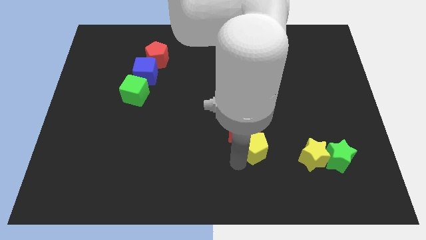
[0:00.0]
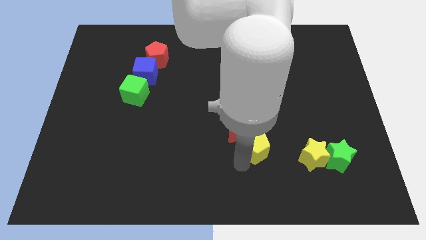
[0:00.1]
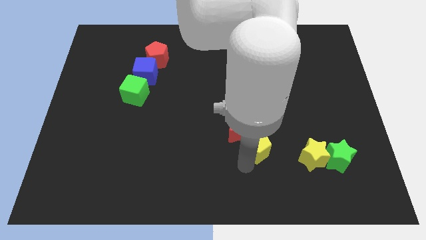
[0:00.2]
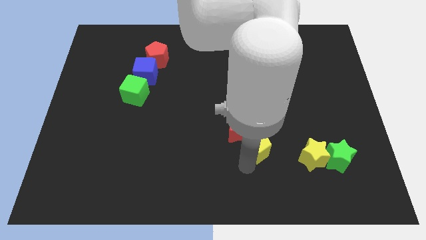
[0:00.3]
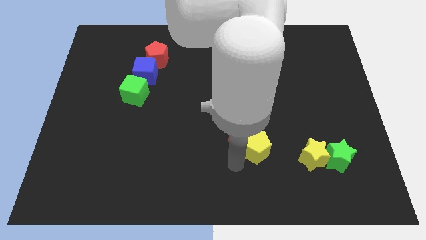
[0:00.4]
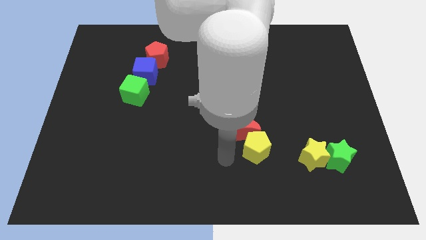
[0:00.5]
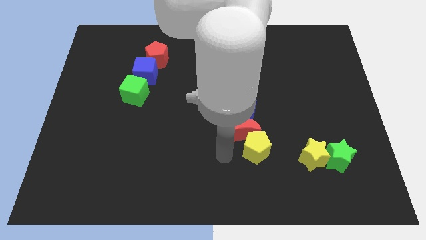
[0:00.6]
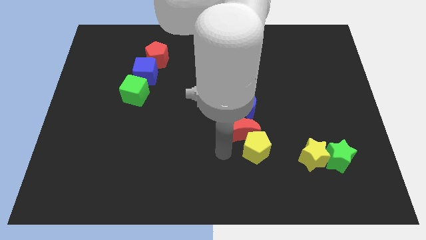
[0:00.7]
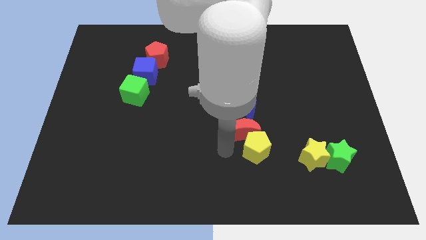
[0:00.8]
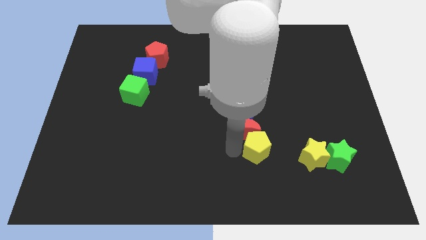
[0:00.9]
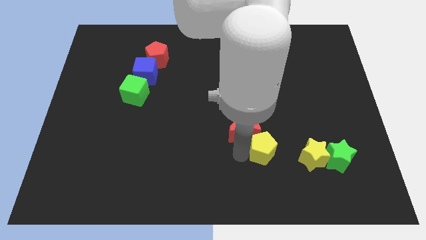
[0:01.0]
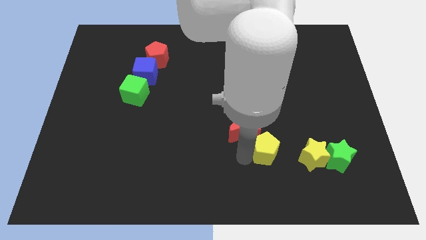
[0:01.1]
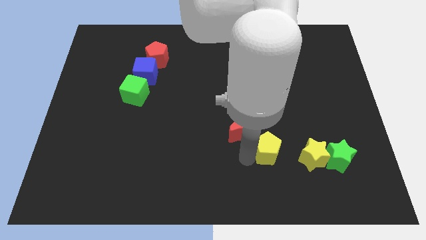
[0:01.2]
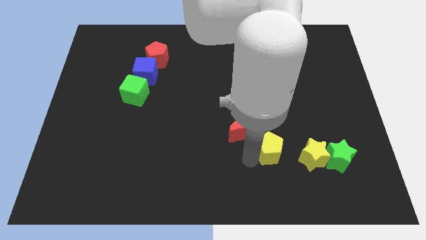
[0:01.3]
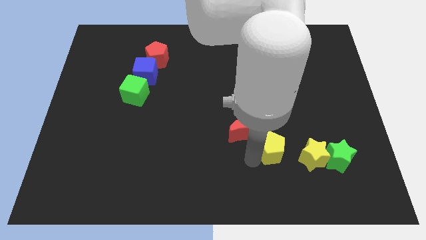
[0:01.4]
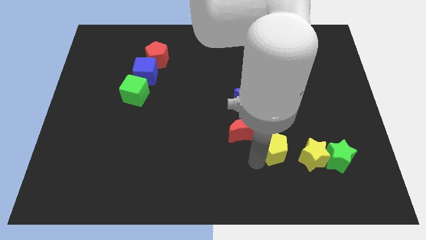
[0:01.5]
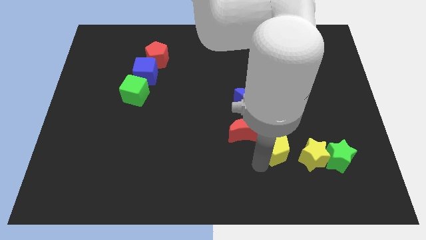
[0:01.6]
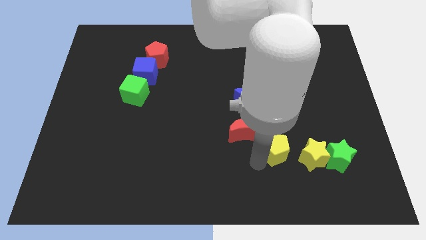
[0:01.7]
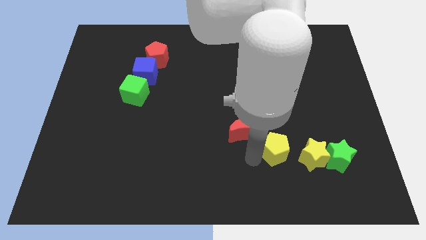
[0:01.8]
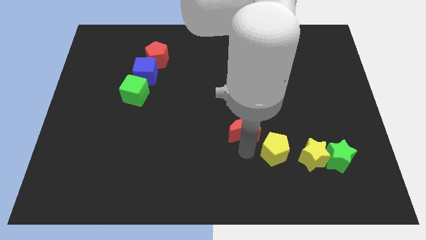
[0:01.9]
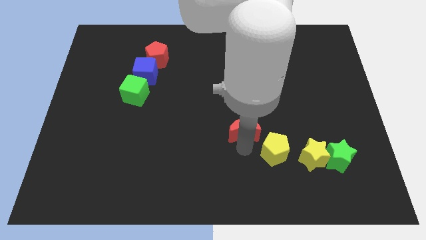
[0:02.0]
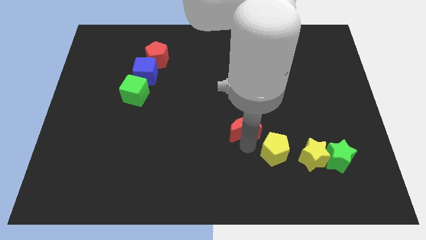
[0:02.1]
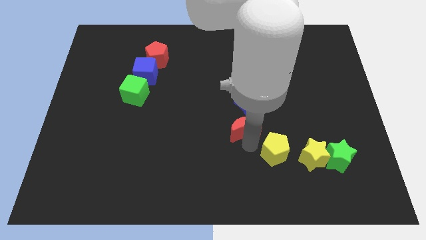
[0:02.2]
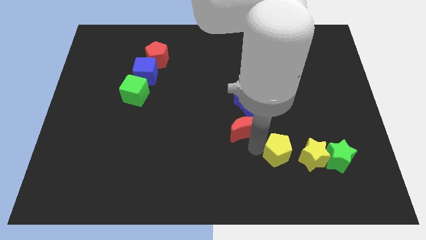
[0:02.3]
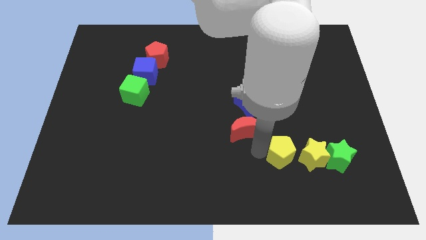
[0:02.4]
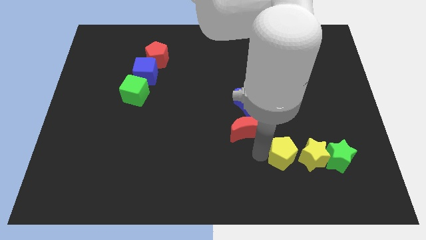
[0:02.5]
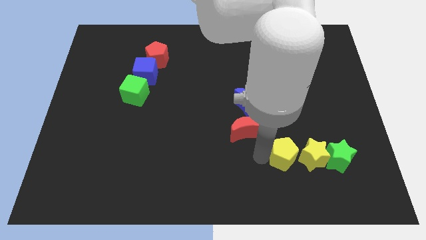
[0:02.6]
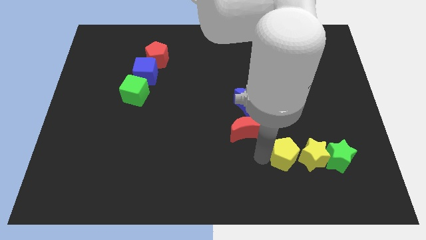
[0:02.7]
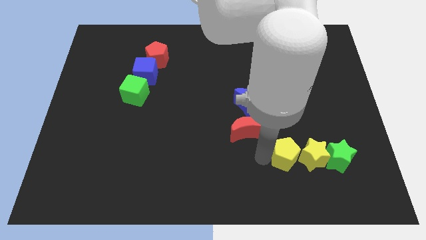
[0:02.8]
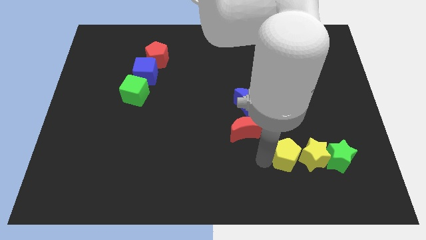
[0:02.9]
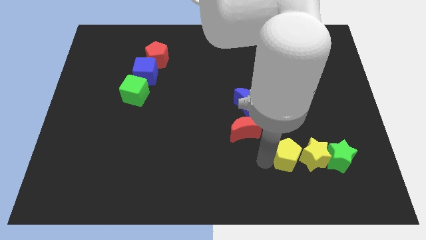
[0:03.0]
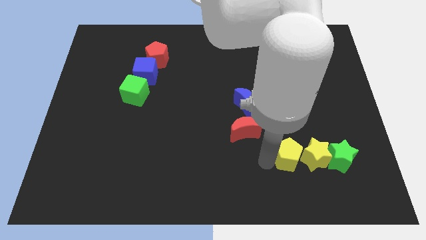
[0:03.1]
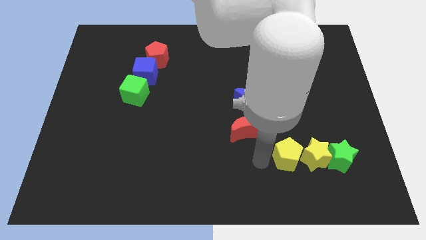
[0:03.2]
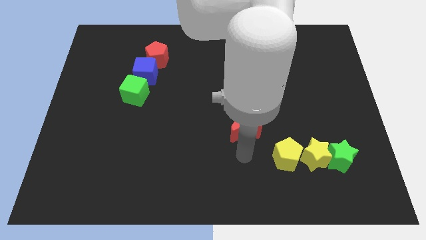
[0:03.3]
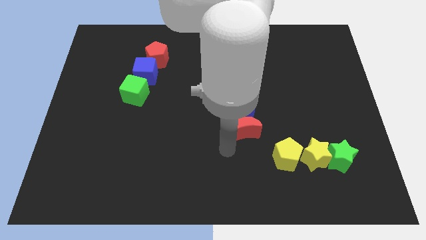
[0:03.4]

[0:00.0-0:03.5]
push yellow pentagon in to yellow star

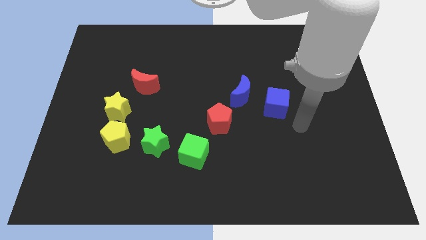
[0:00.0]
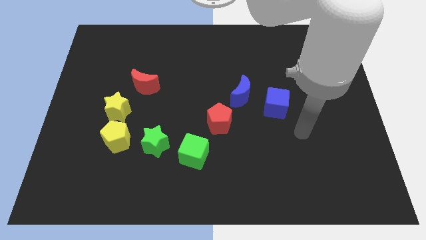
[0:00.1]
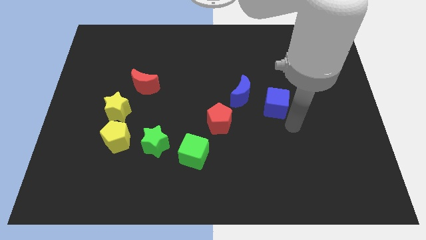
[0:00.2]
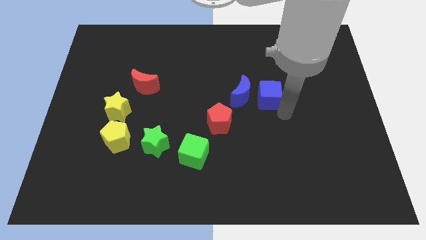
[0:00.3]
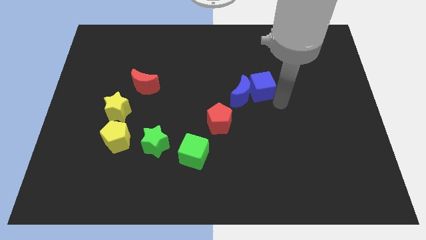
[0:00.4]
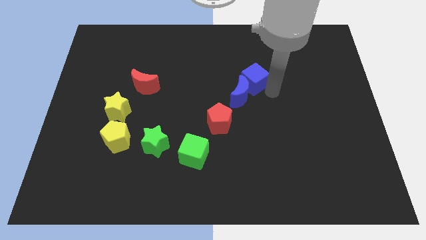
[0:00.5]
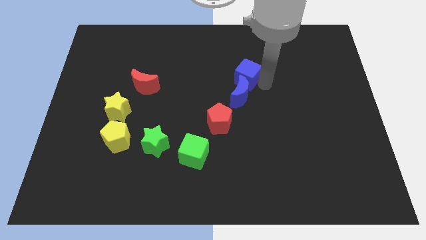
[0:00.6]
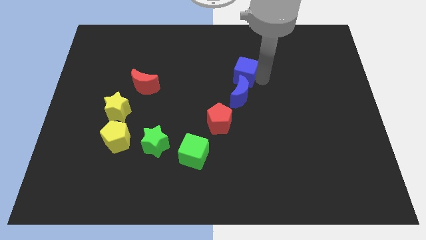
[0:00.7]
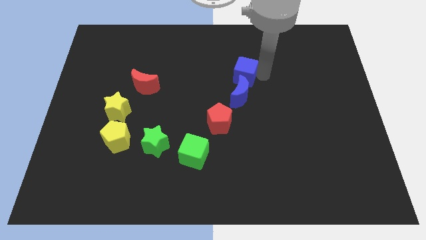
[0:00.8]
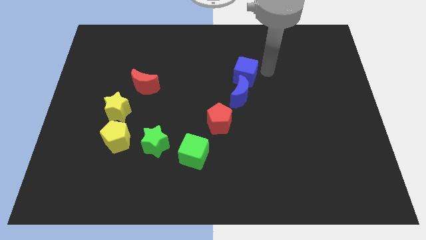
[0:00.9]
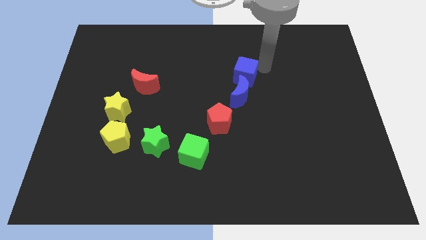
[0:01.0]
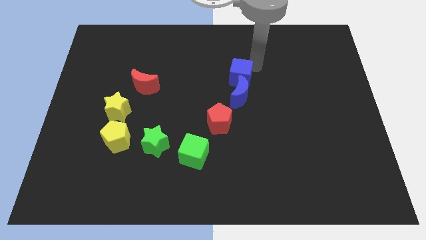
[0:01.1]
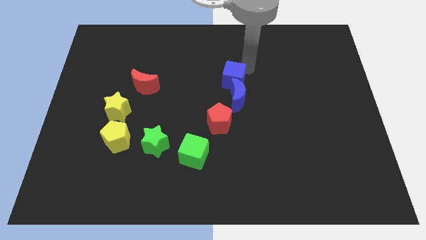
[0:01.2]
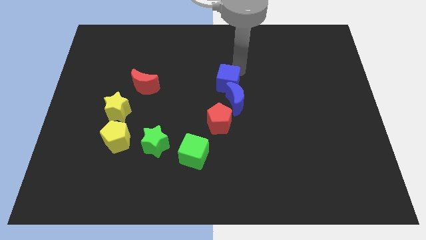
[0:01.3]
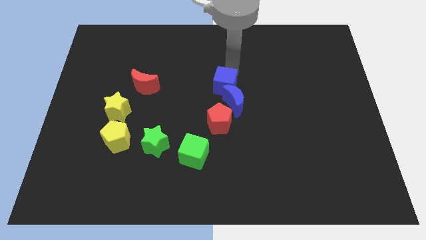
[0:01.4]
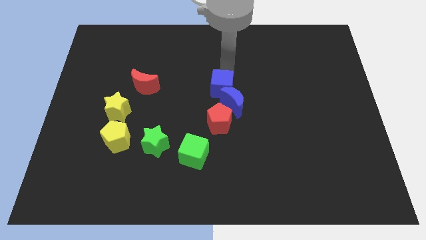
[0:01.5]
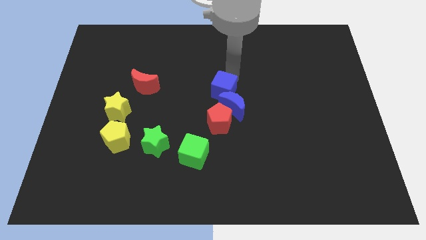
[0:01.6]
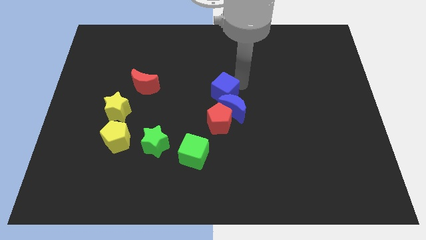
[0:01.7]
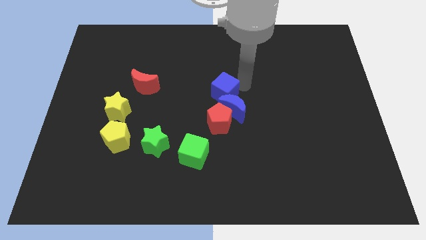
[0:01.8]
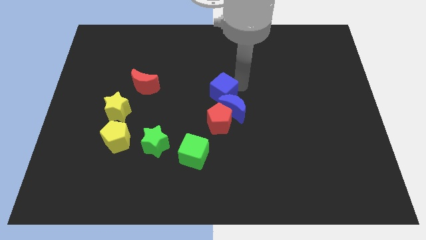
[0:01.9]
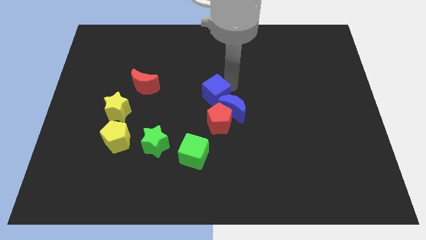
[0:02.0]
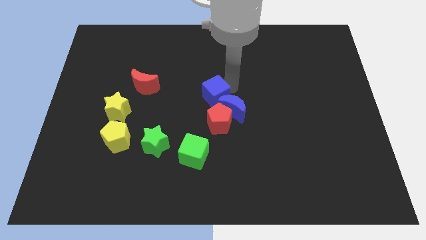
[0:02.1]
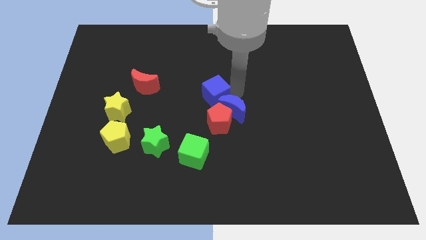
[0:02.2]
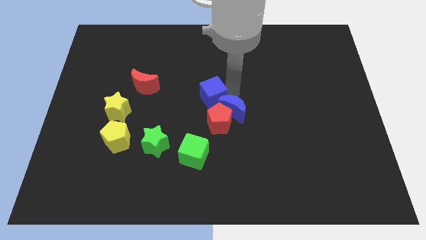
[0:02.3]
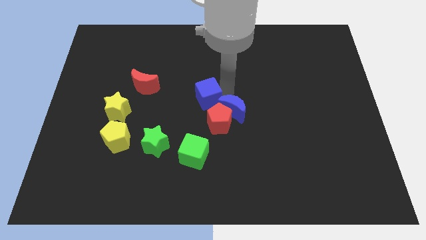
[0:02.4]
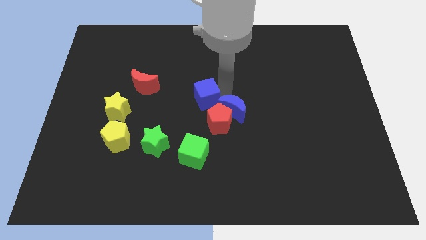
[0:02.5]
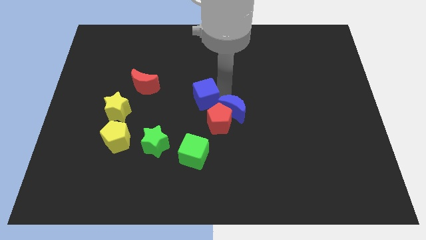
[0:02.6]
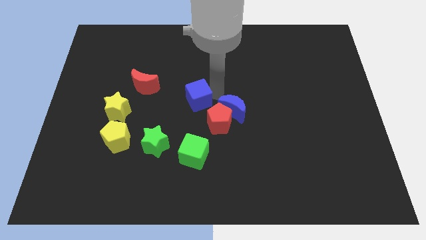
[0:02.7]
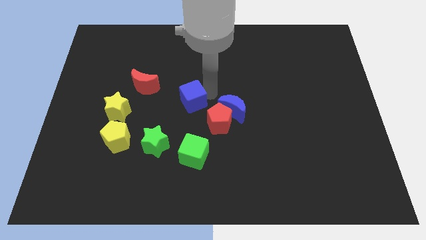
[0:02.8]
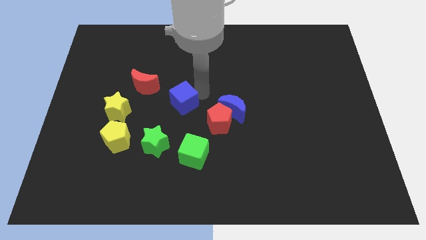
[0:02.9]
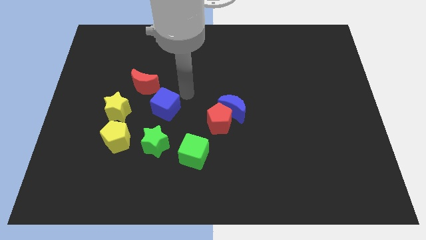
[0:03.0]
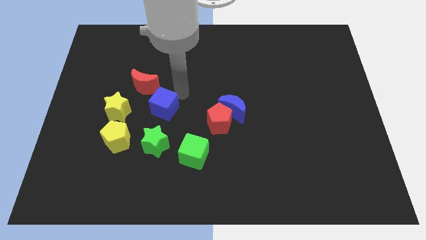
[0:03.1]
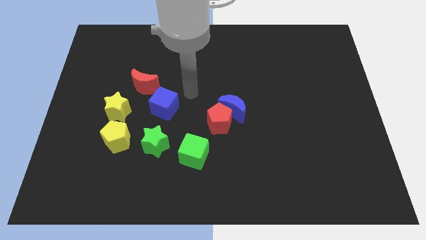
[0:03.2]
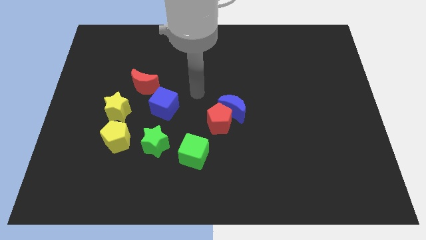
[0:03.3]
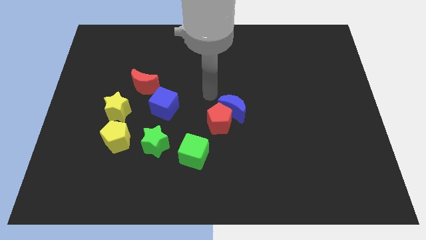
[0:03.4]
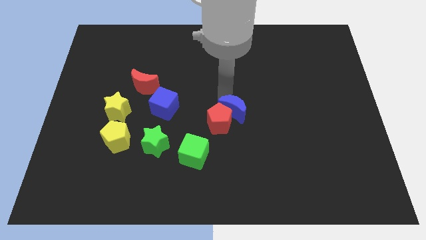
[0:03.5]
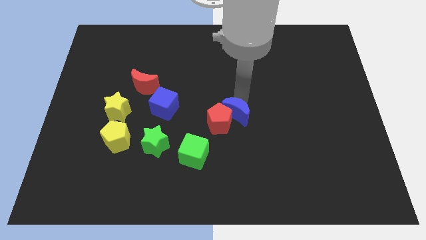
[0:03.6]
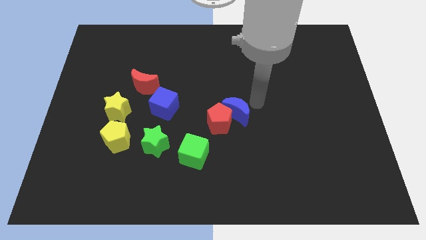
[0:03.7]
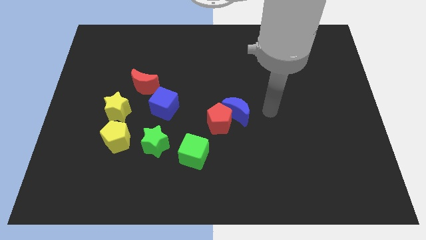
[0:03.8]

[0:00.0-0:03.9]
move the blue cube close to the red crescent

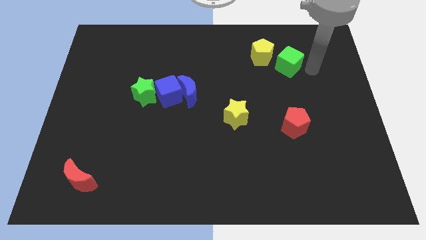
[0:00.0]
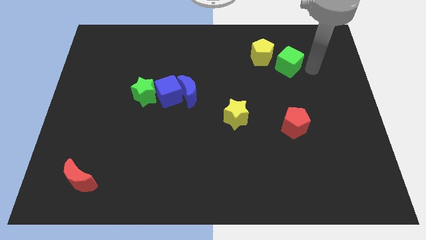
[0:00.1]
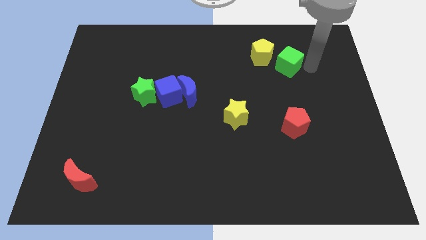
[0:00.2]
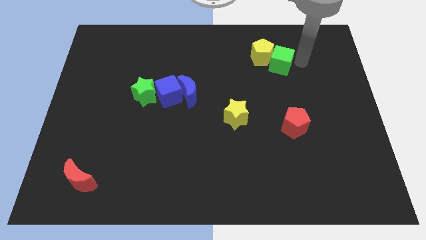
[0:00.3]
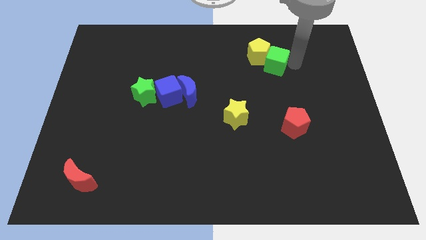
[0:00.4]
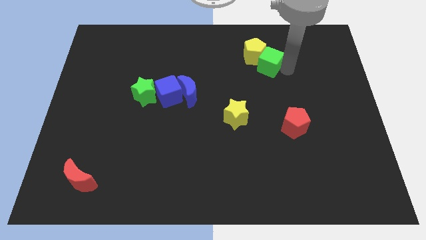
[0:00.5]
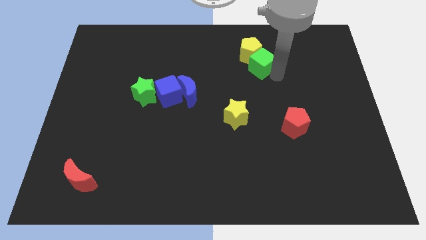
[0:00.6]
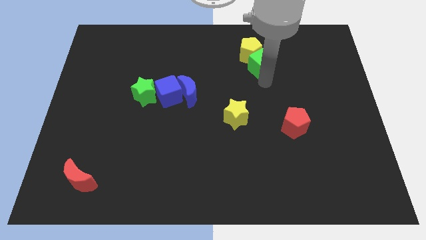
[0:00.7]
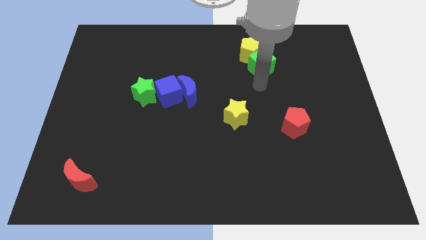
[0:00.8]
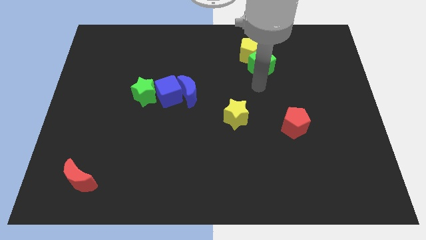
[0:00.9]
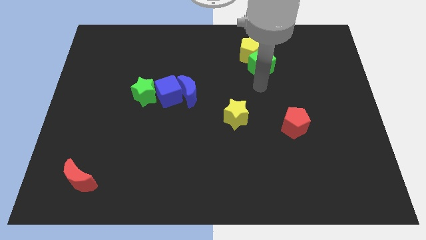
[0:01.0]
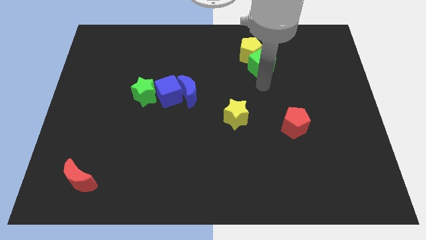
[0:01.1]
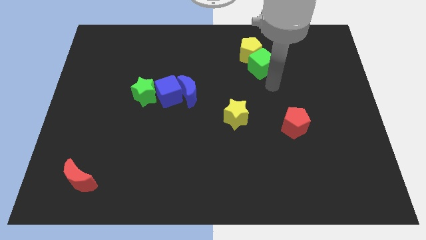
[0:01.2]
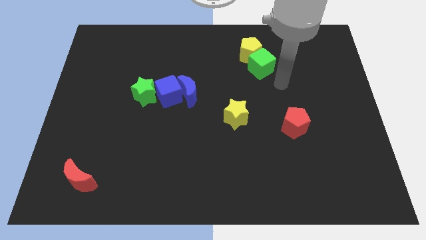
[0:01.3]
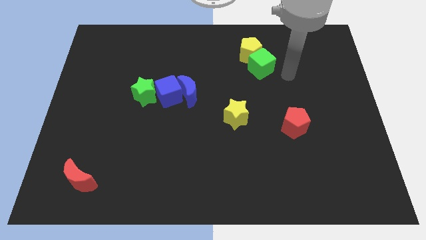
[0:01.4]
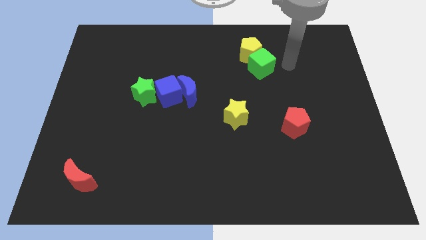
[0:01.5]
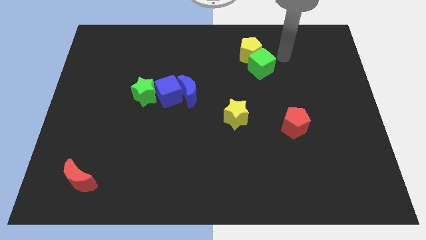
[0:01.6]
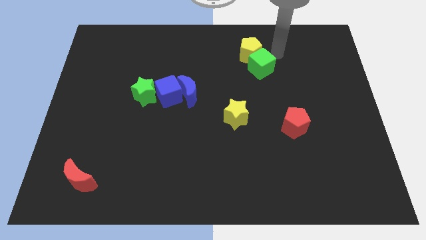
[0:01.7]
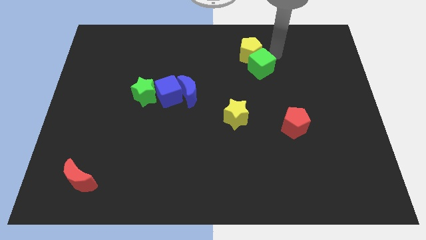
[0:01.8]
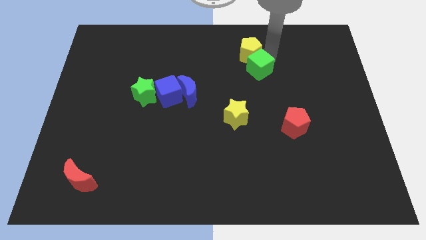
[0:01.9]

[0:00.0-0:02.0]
push the green cube into the yellow pentagon
